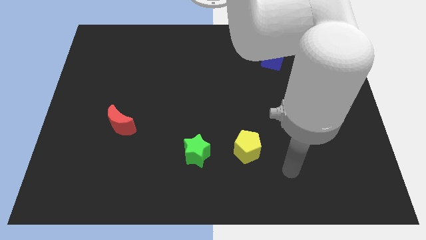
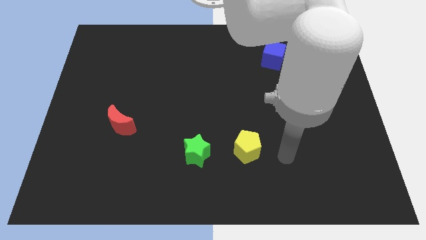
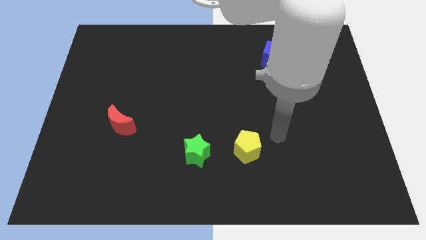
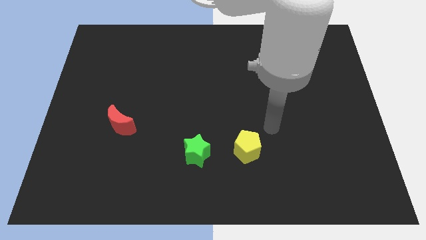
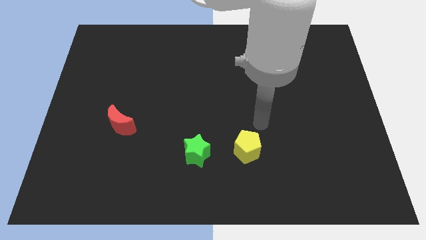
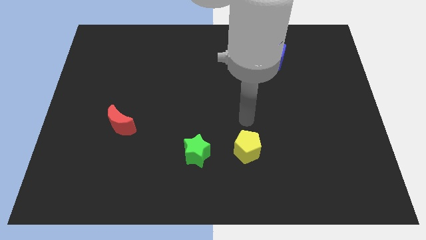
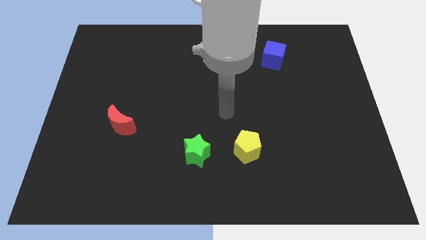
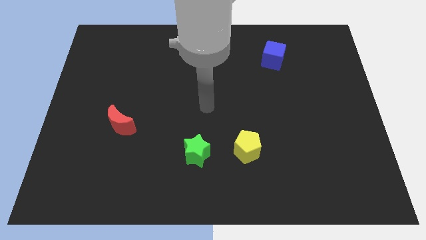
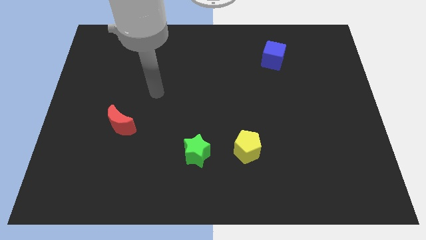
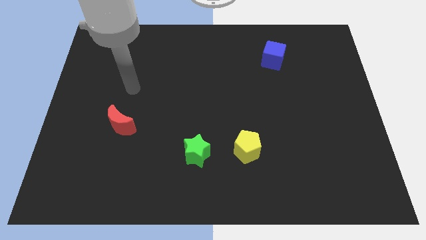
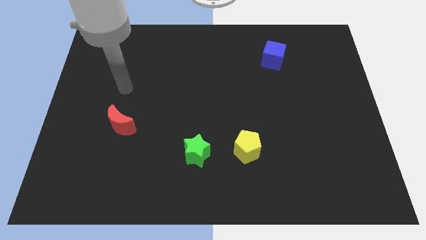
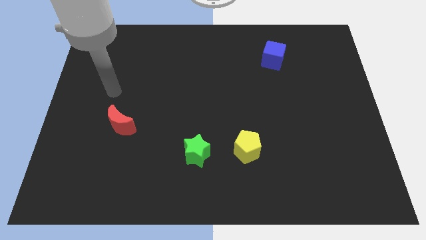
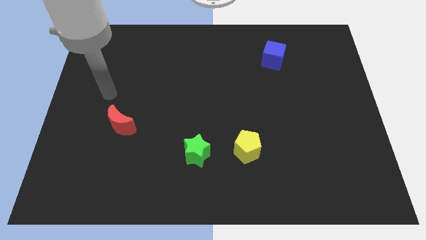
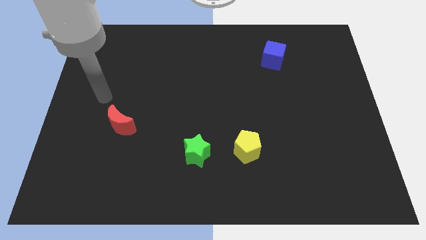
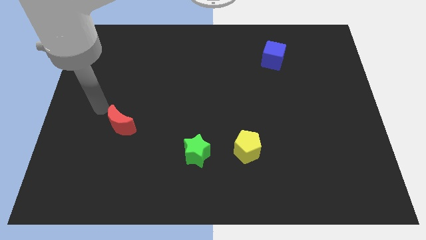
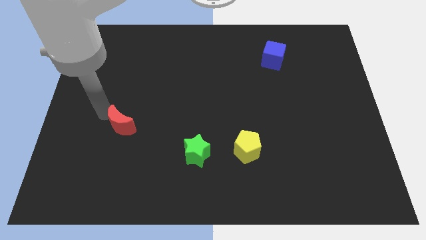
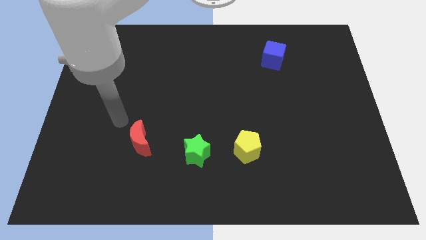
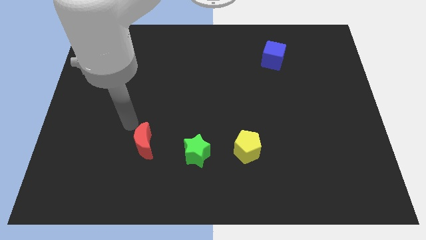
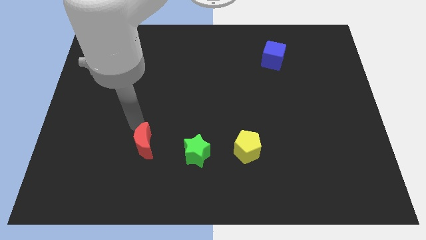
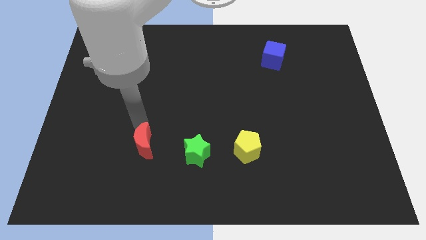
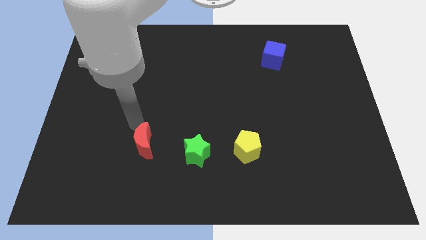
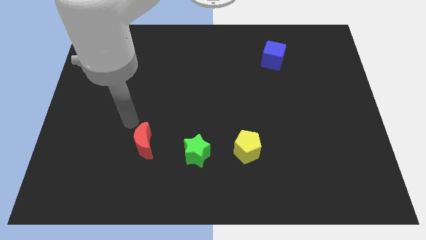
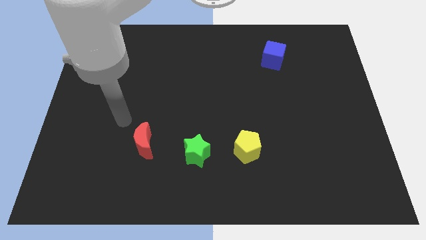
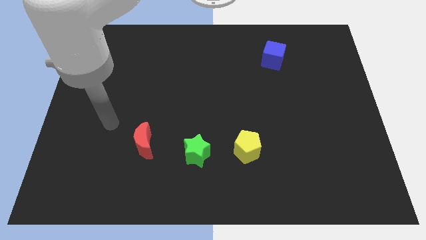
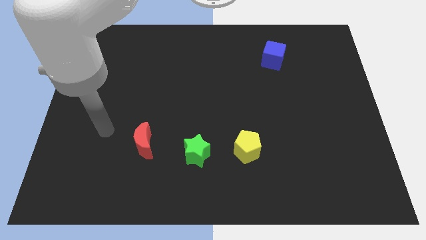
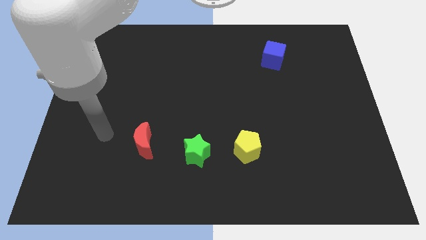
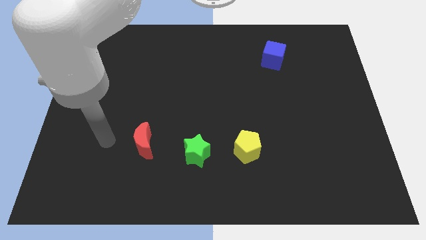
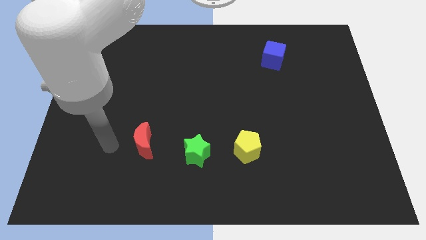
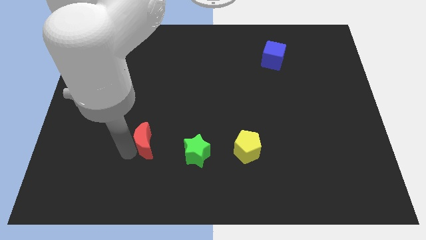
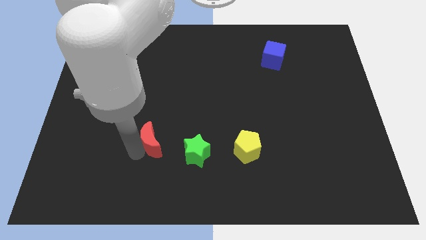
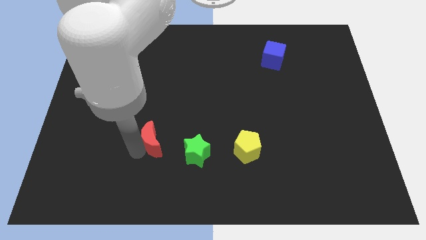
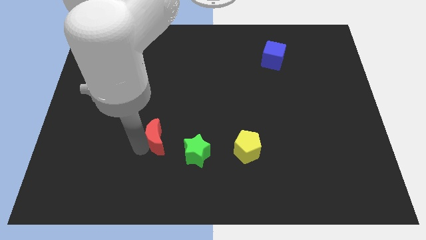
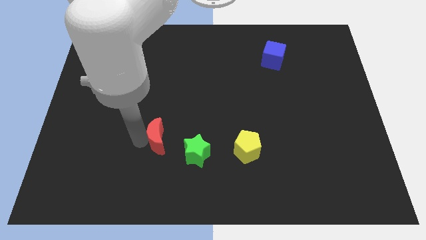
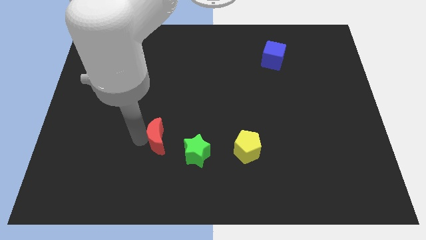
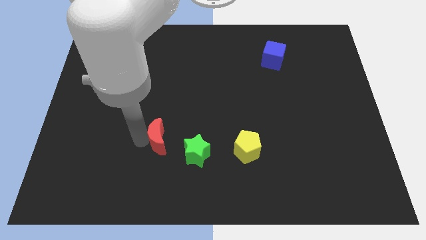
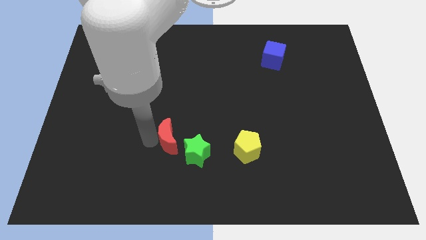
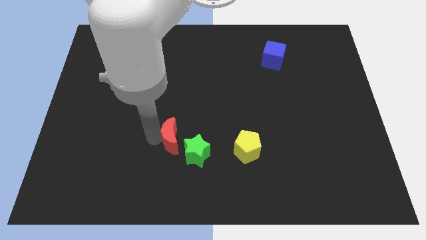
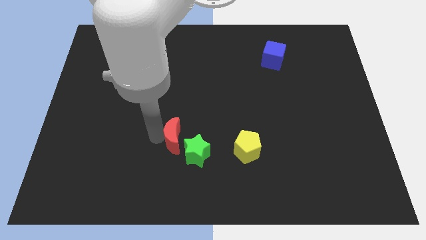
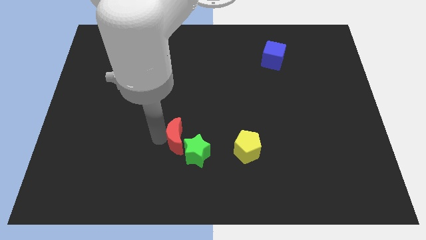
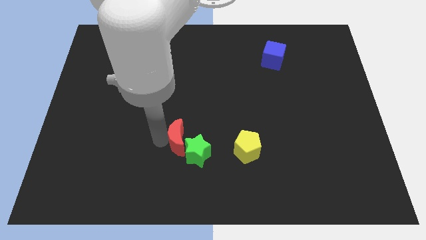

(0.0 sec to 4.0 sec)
put the red block next to the green block

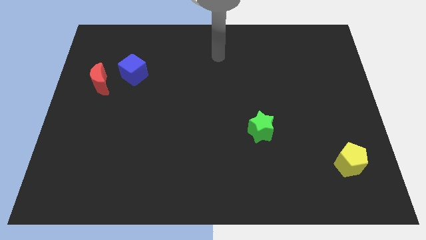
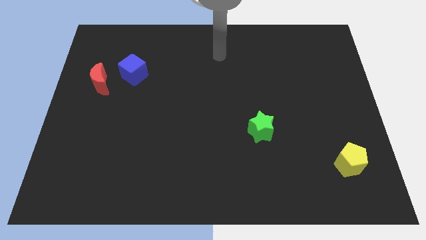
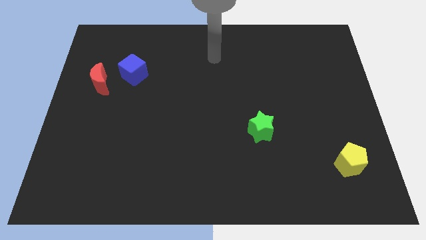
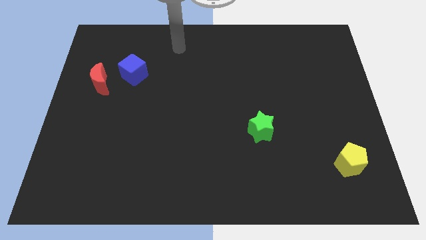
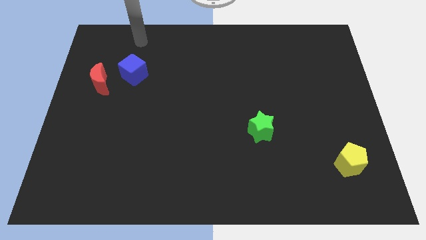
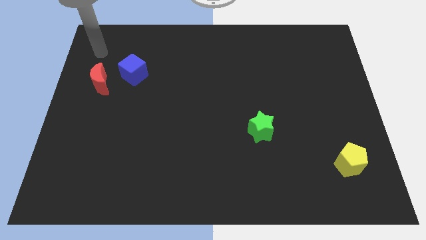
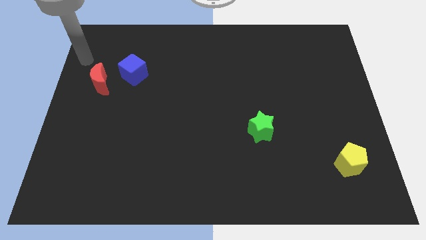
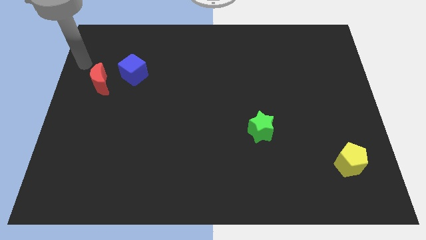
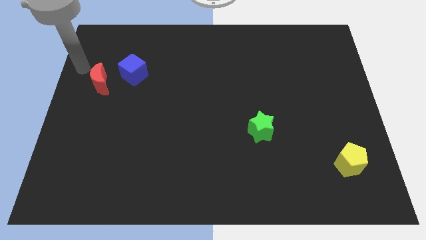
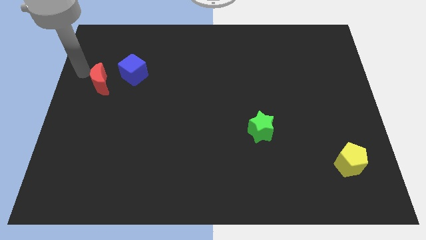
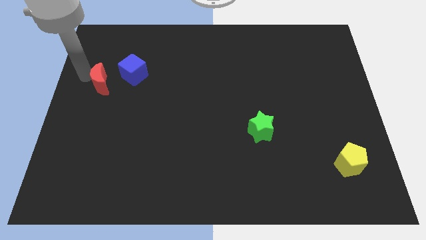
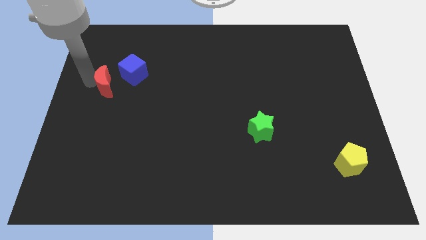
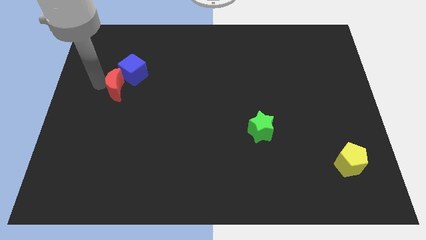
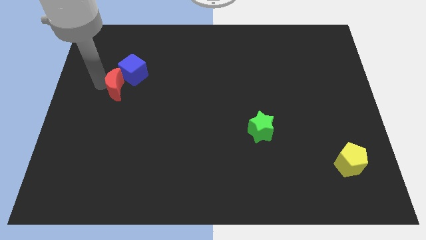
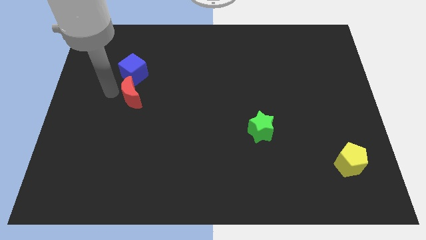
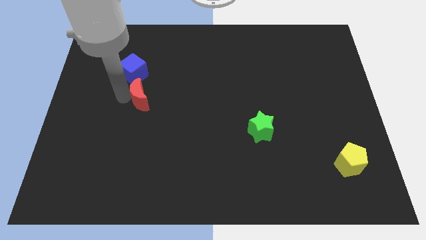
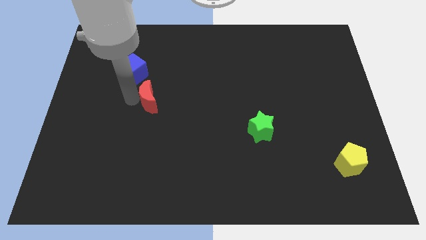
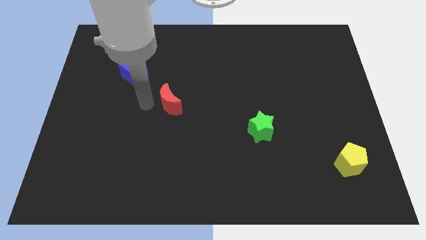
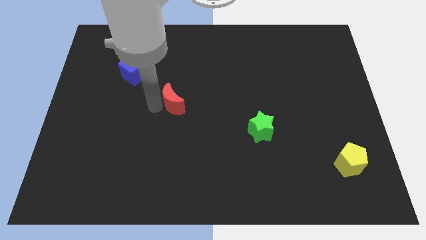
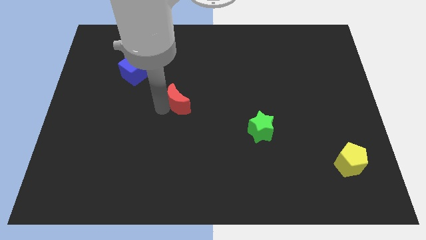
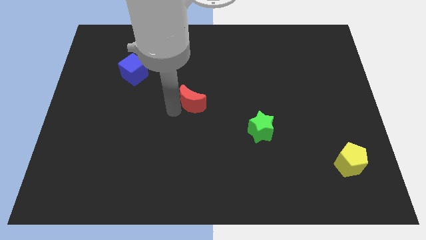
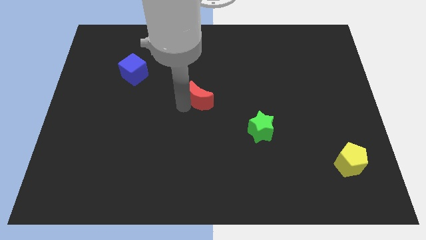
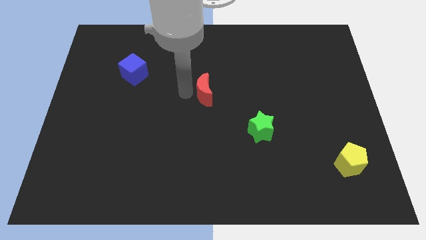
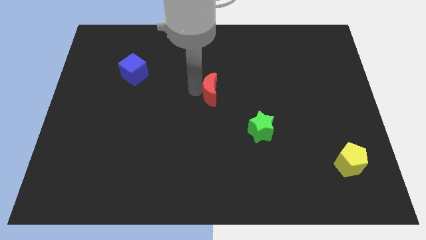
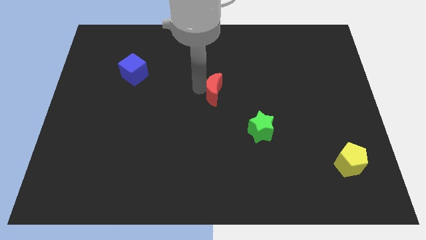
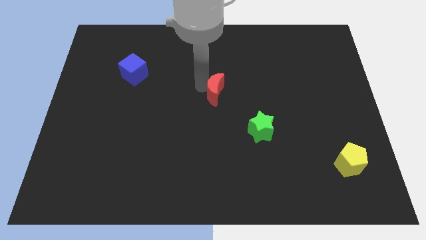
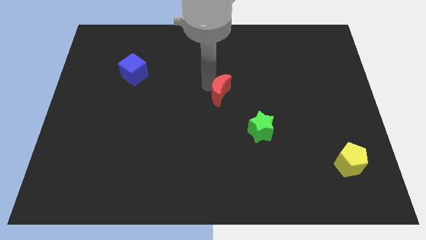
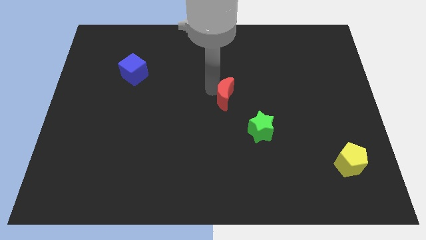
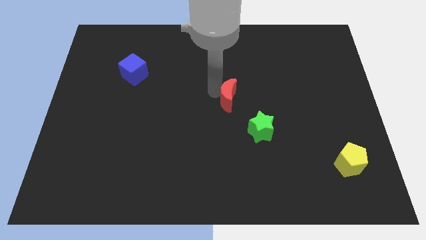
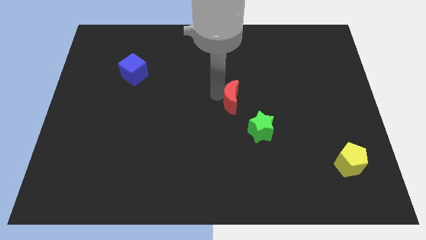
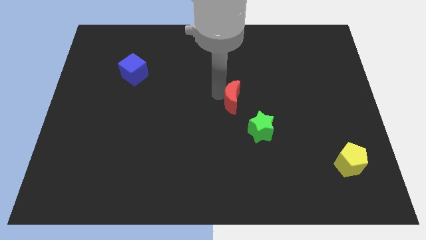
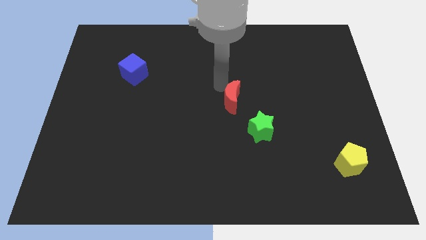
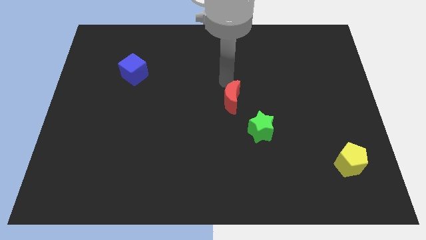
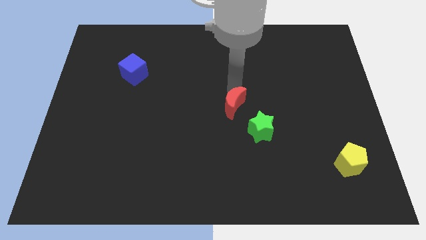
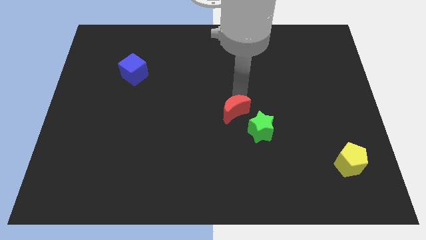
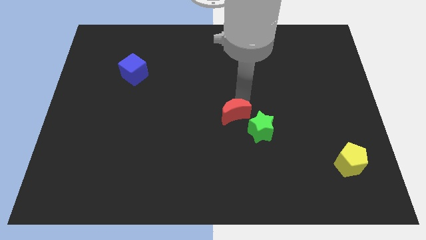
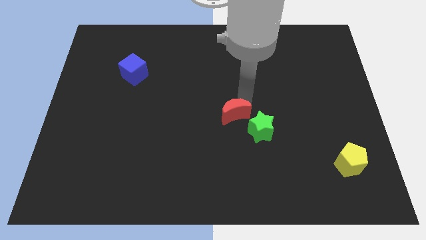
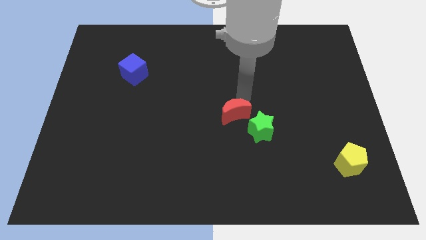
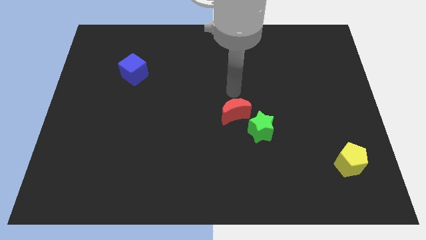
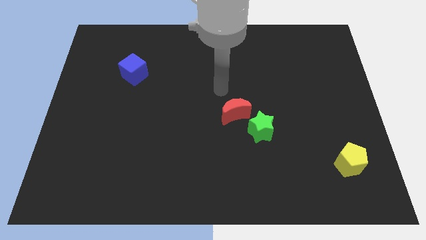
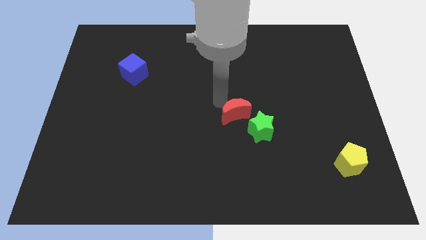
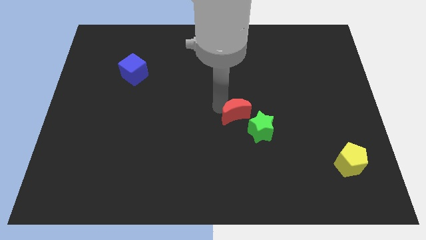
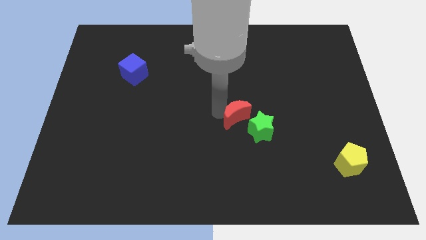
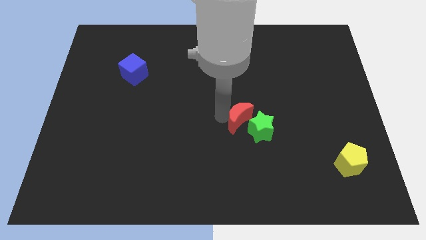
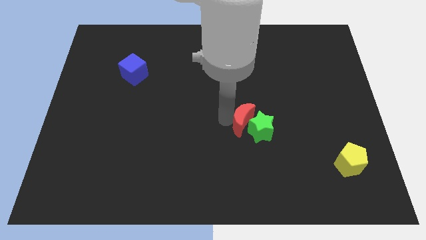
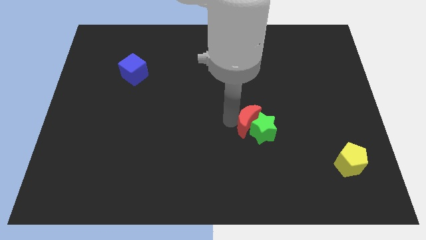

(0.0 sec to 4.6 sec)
put the moon to the star
